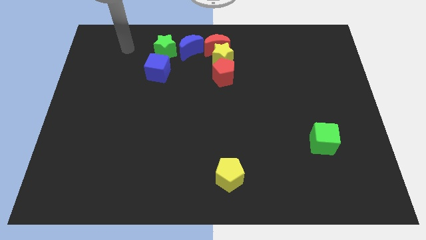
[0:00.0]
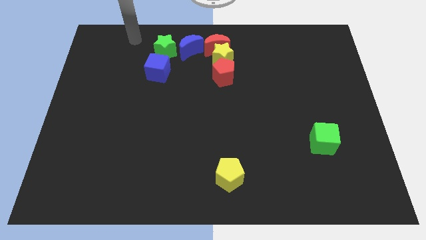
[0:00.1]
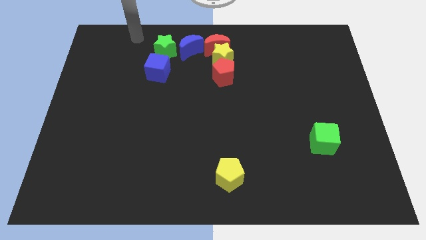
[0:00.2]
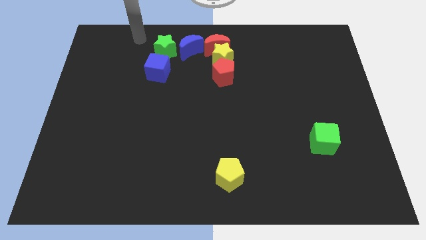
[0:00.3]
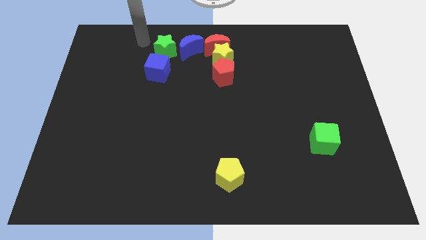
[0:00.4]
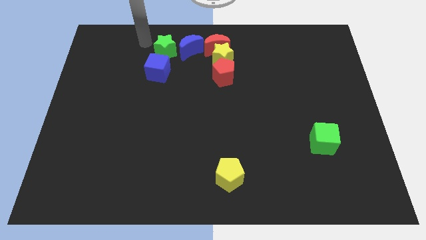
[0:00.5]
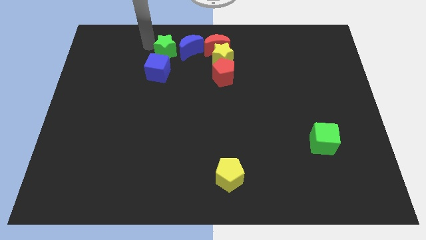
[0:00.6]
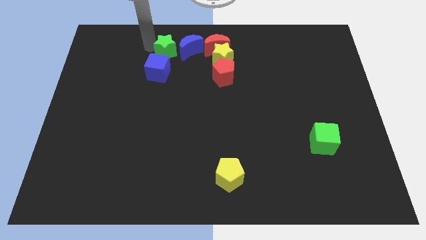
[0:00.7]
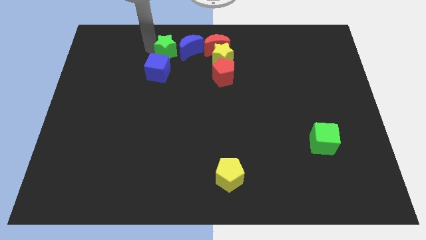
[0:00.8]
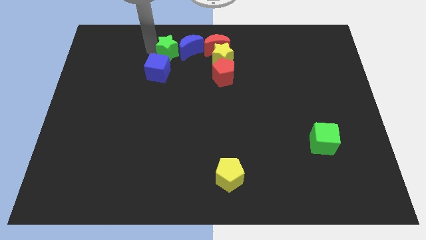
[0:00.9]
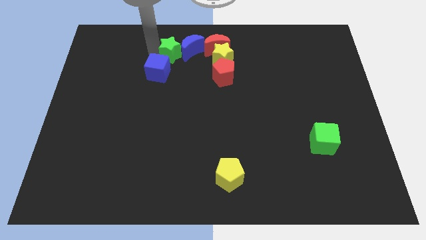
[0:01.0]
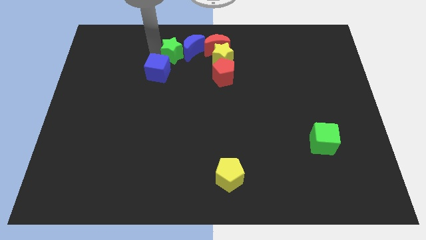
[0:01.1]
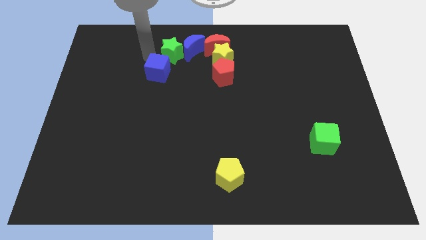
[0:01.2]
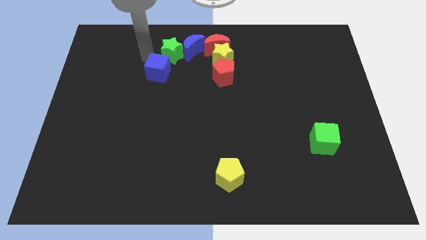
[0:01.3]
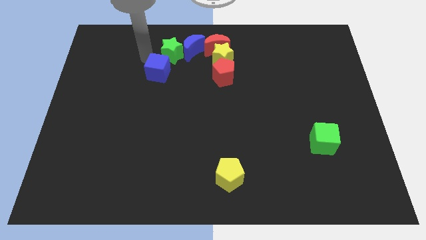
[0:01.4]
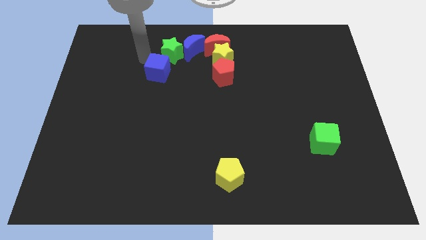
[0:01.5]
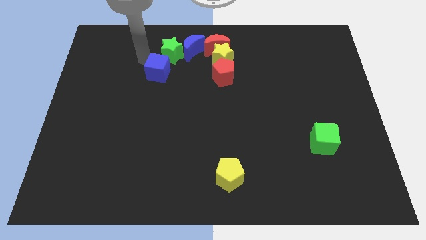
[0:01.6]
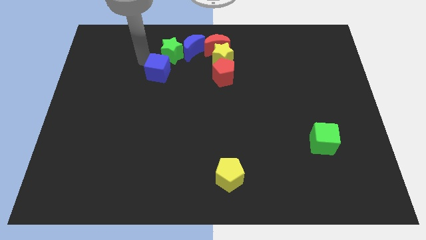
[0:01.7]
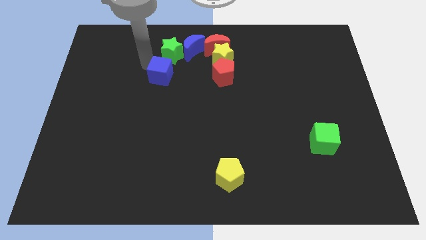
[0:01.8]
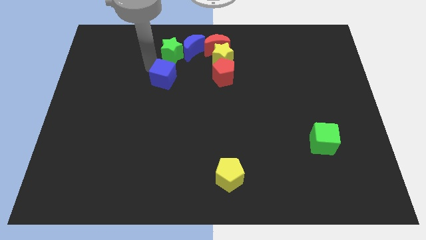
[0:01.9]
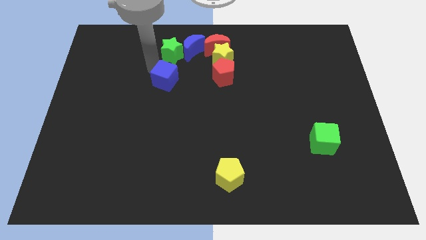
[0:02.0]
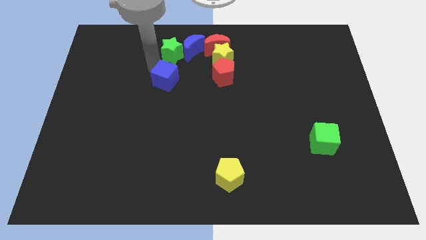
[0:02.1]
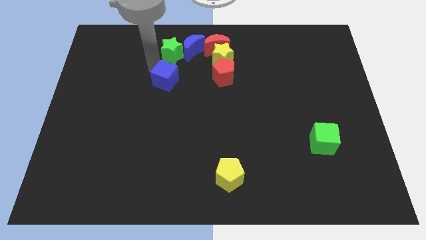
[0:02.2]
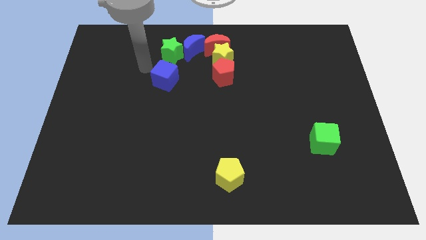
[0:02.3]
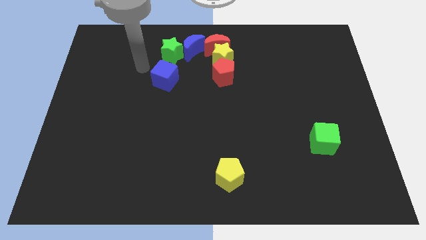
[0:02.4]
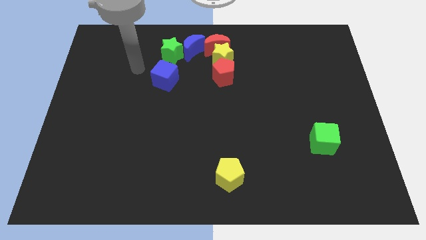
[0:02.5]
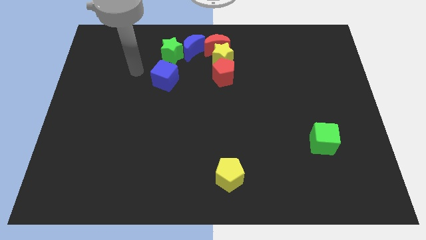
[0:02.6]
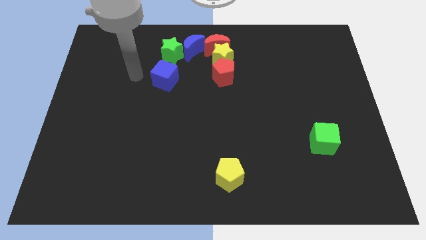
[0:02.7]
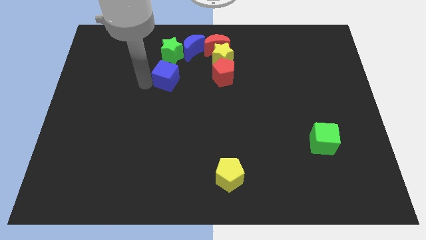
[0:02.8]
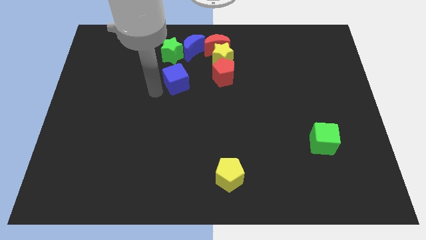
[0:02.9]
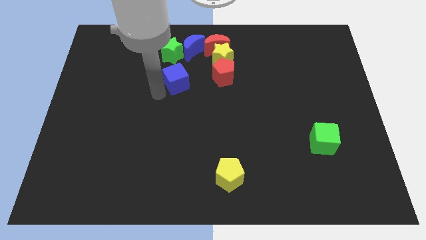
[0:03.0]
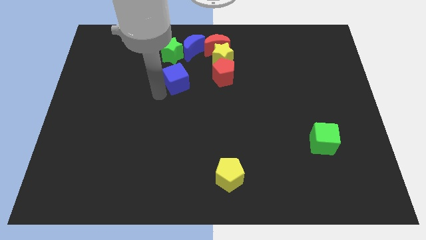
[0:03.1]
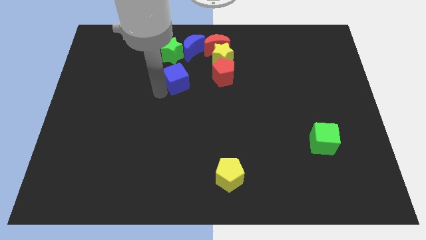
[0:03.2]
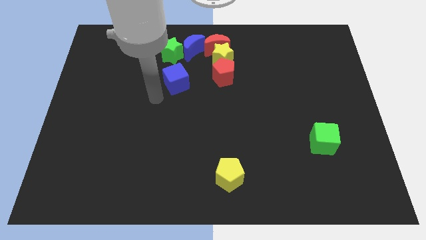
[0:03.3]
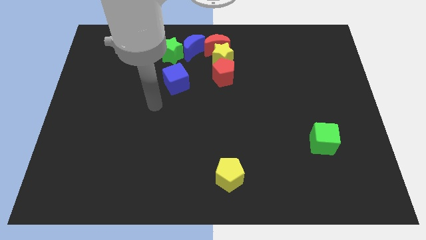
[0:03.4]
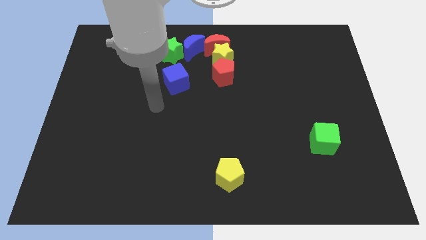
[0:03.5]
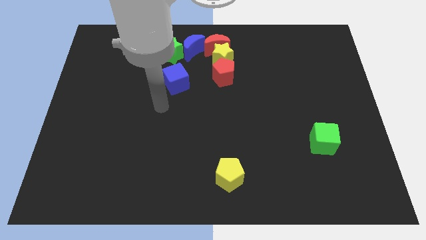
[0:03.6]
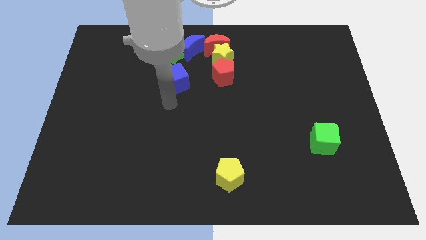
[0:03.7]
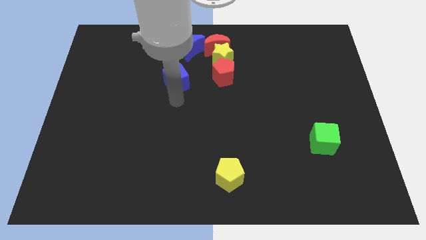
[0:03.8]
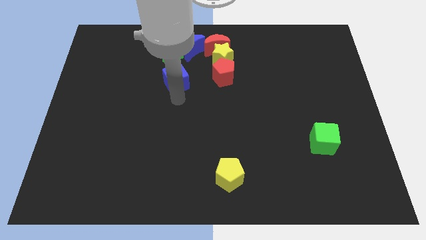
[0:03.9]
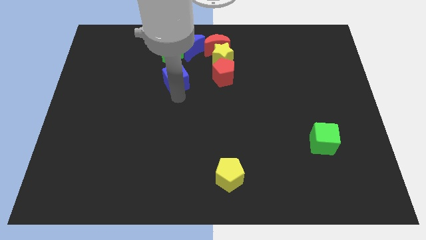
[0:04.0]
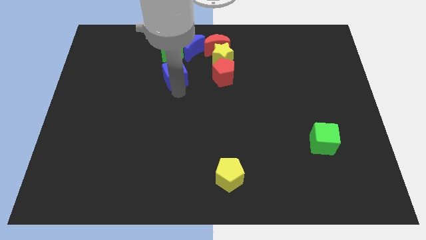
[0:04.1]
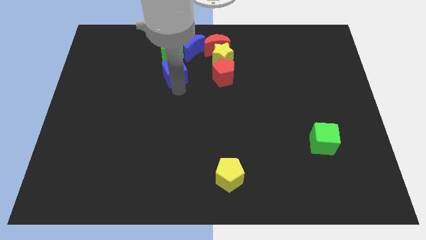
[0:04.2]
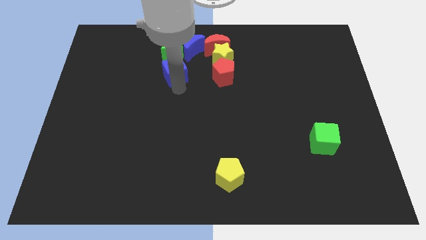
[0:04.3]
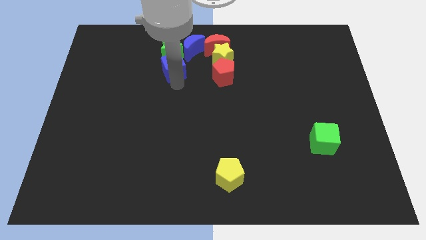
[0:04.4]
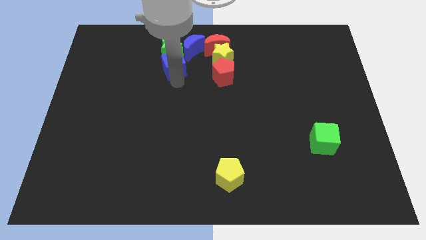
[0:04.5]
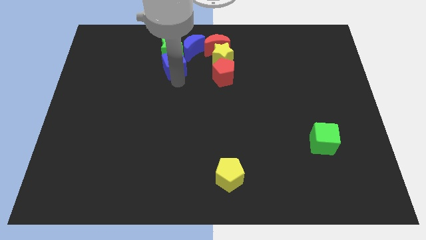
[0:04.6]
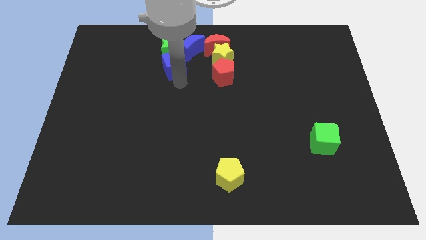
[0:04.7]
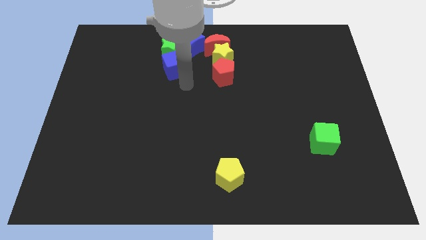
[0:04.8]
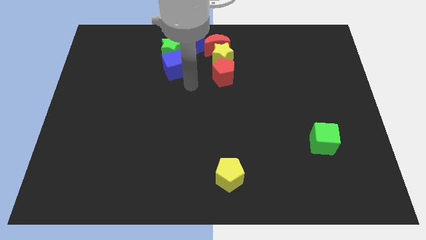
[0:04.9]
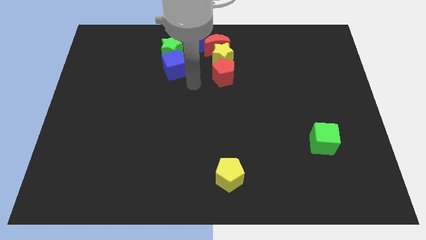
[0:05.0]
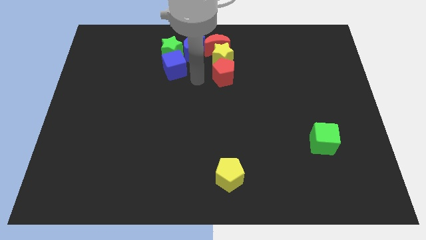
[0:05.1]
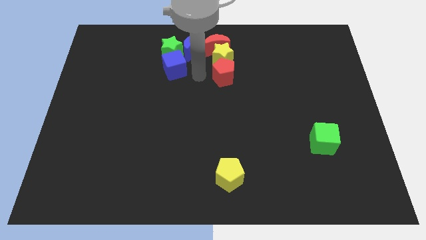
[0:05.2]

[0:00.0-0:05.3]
place the blue cube below the green star

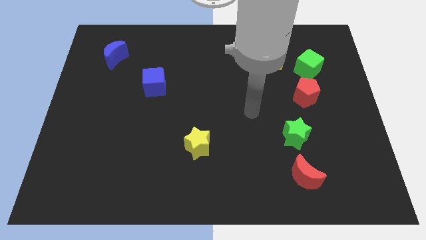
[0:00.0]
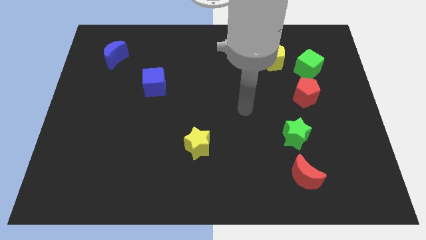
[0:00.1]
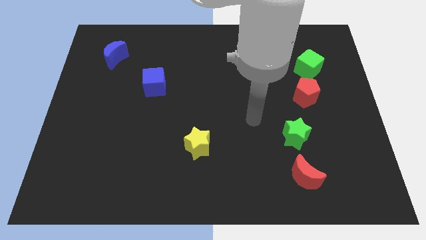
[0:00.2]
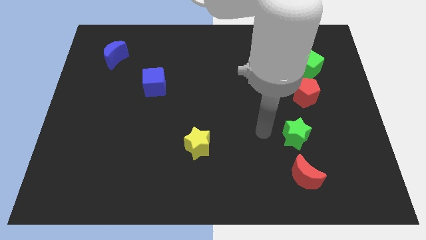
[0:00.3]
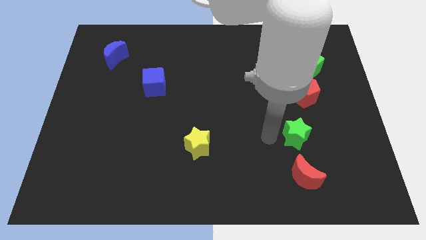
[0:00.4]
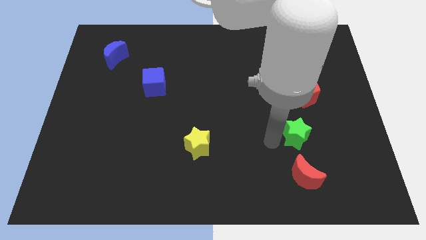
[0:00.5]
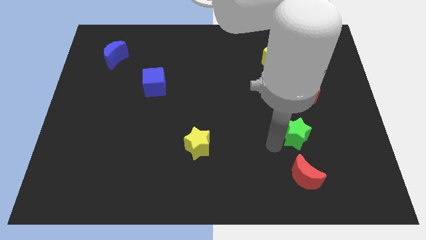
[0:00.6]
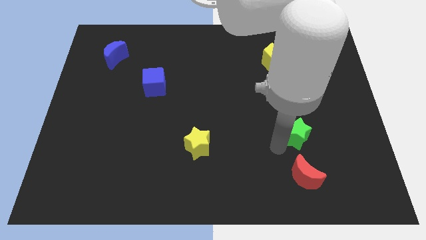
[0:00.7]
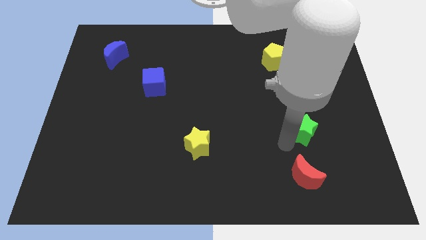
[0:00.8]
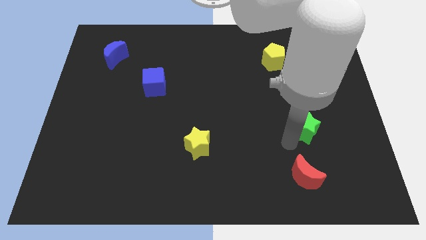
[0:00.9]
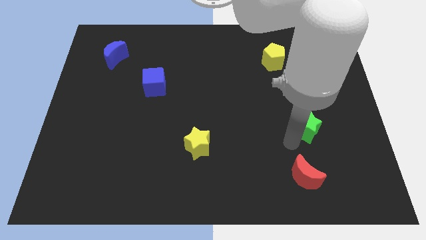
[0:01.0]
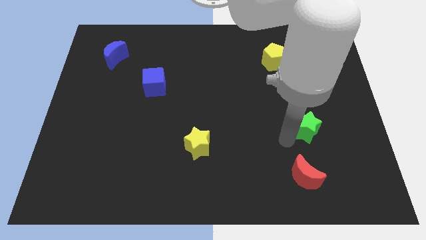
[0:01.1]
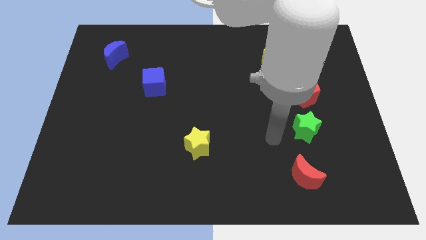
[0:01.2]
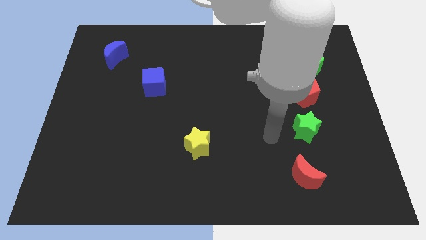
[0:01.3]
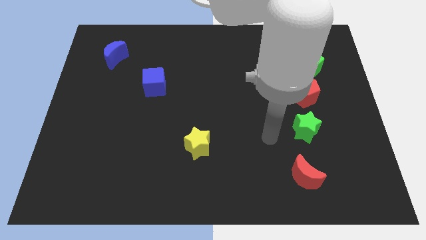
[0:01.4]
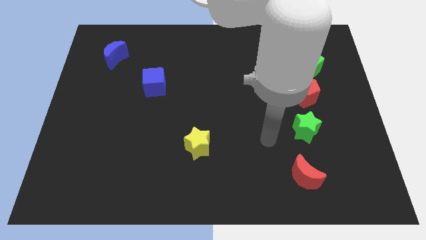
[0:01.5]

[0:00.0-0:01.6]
put the green star in between the red blocks

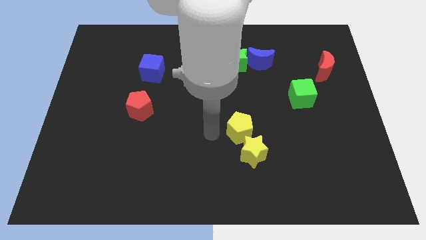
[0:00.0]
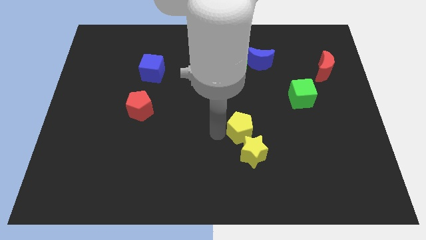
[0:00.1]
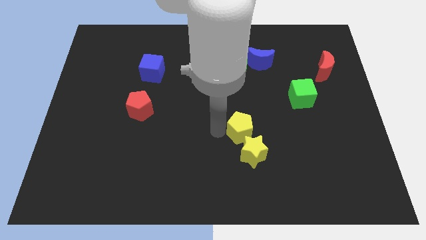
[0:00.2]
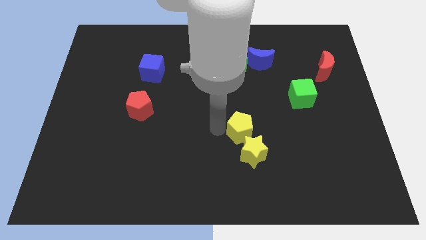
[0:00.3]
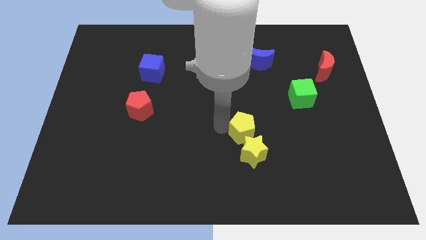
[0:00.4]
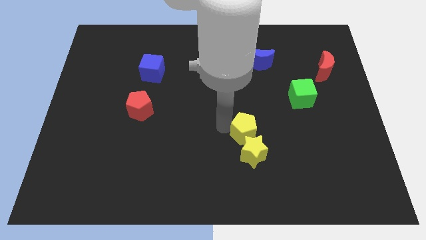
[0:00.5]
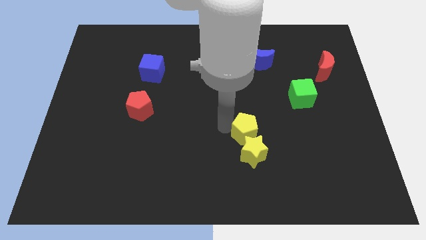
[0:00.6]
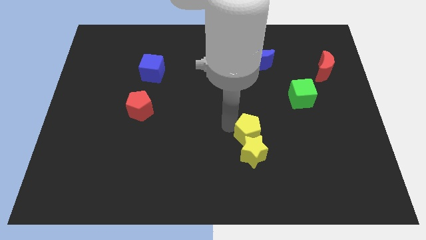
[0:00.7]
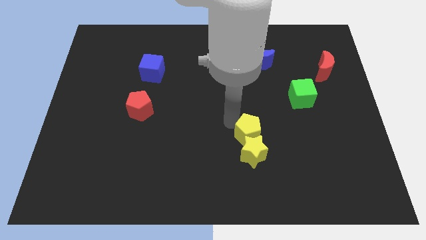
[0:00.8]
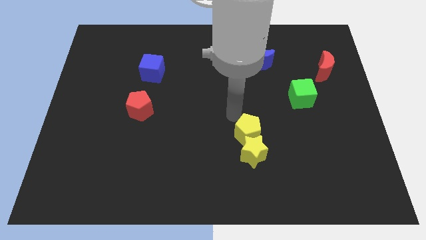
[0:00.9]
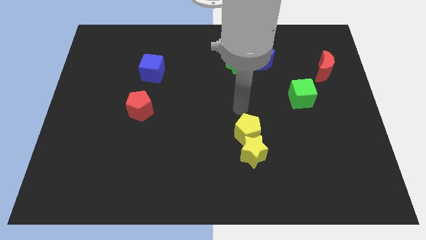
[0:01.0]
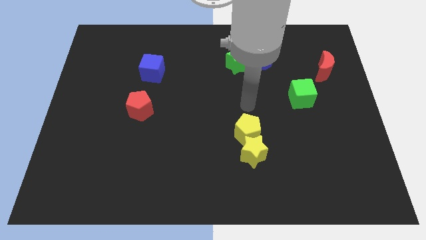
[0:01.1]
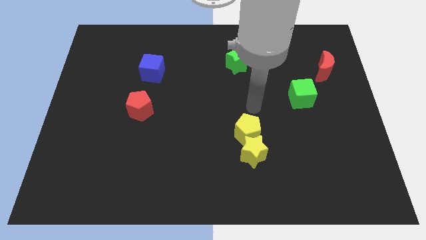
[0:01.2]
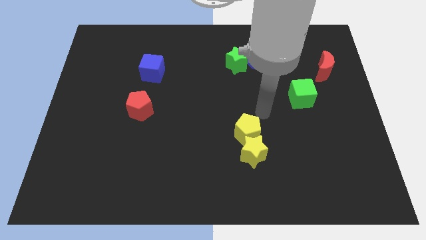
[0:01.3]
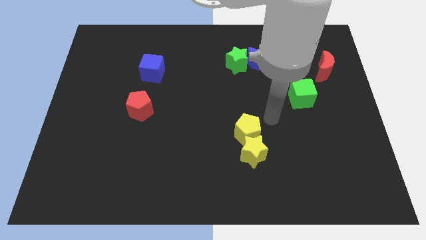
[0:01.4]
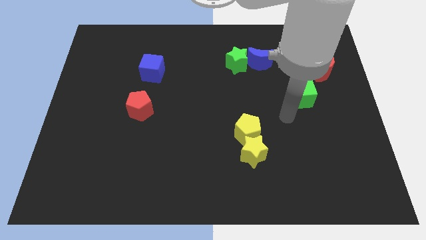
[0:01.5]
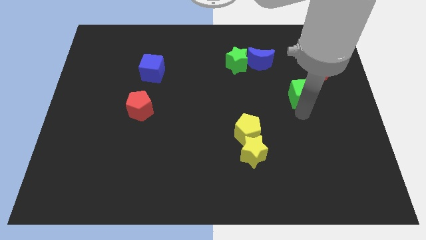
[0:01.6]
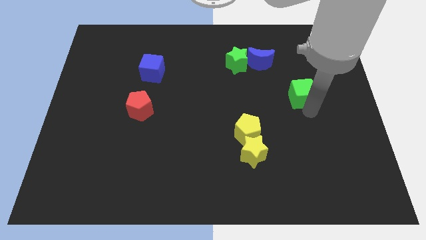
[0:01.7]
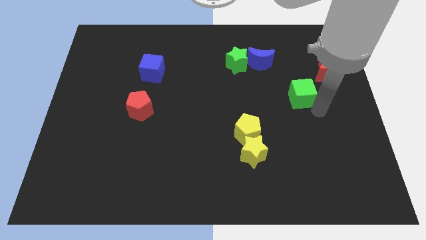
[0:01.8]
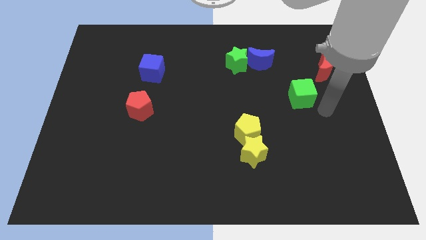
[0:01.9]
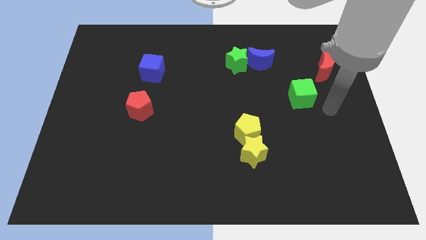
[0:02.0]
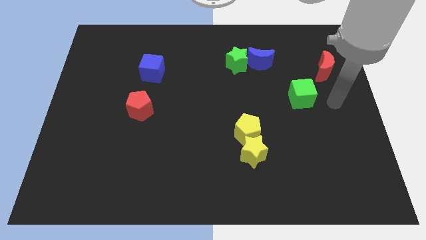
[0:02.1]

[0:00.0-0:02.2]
move your arm to the right of the green cube

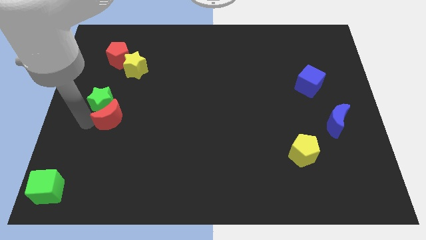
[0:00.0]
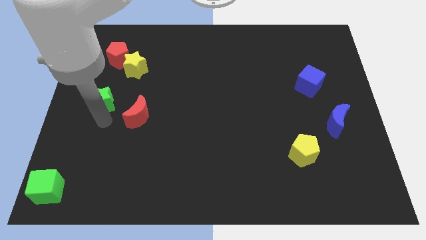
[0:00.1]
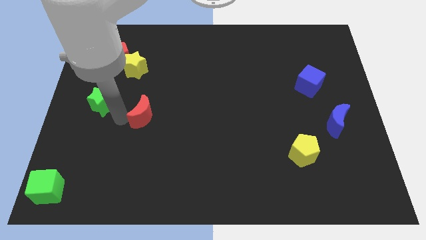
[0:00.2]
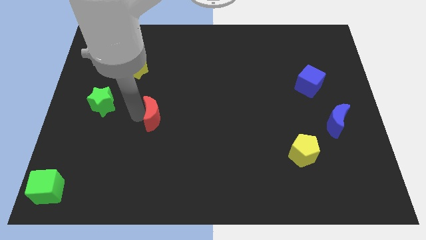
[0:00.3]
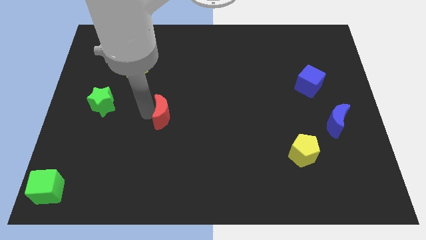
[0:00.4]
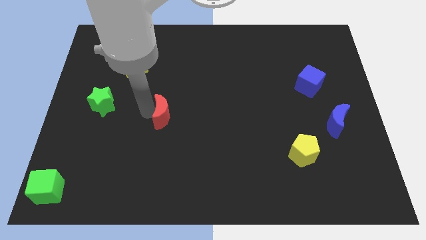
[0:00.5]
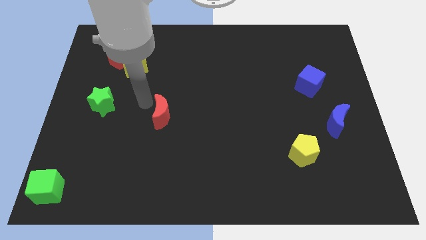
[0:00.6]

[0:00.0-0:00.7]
separate the red crescent from green star
